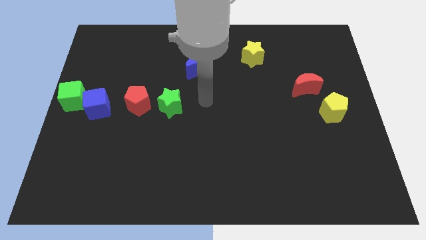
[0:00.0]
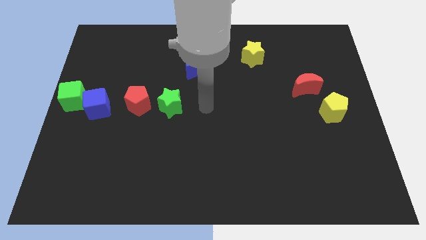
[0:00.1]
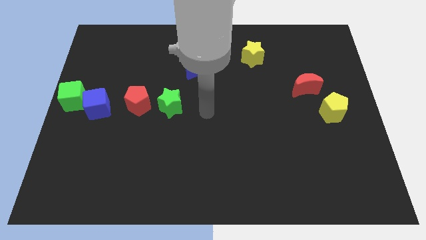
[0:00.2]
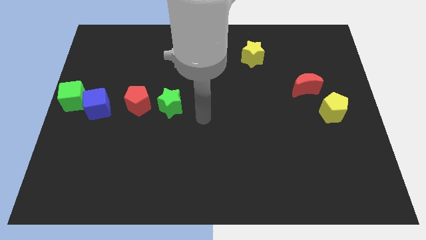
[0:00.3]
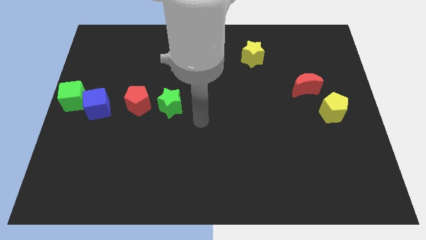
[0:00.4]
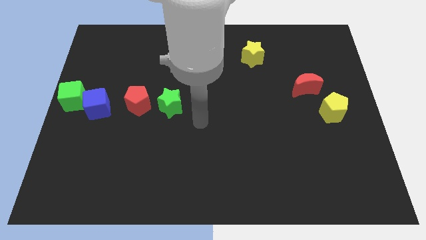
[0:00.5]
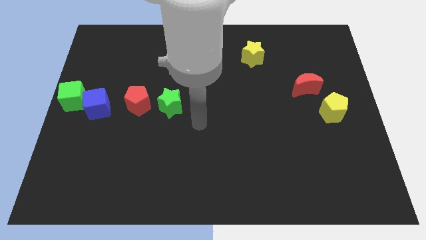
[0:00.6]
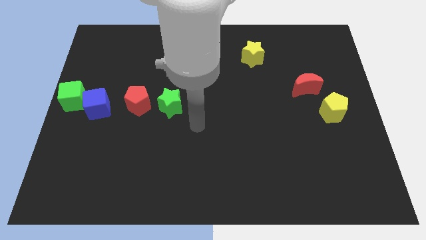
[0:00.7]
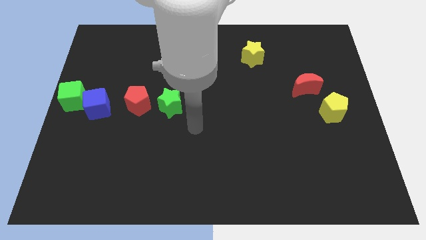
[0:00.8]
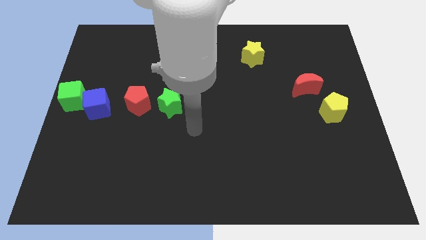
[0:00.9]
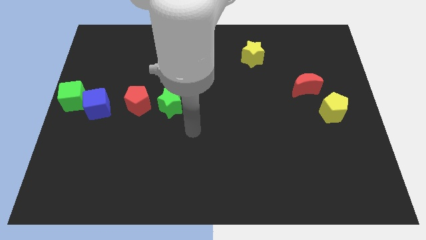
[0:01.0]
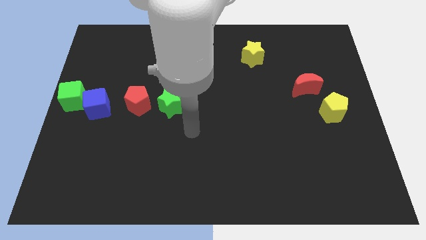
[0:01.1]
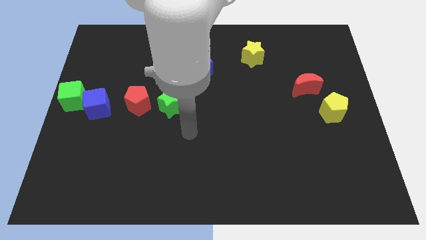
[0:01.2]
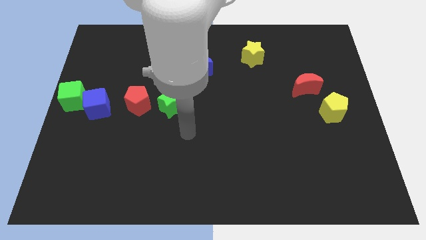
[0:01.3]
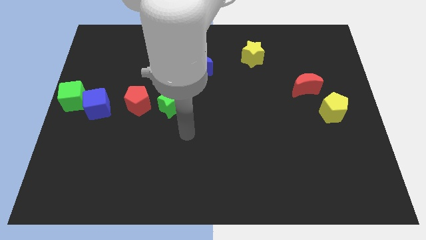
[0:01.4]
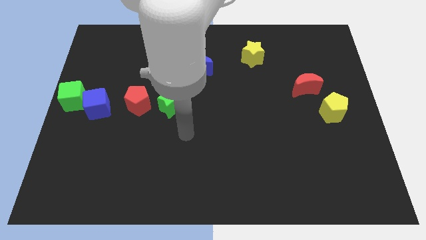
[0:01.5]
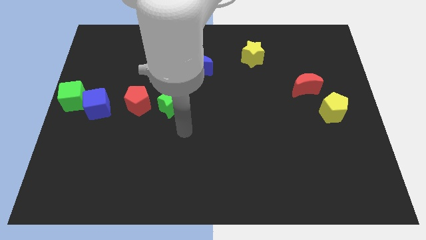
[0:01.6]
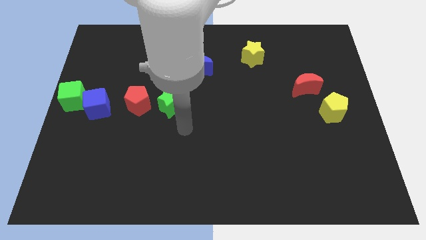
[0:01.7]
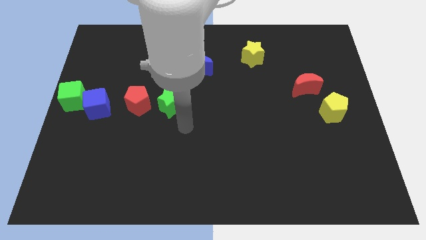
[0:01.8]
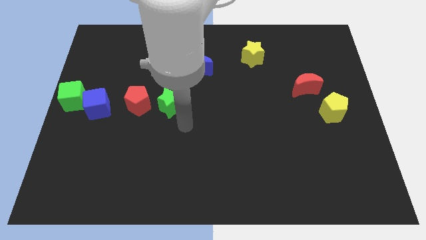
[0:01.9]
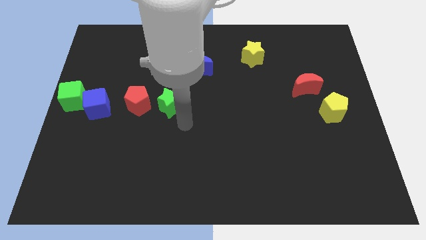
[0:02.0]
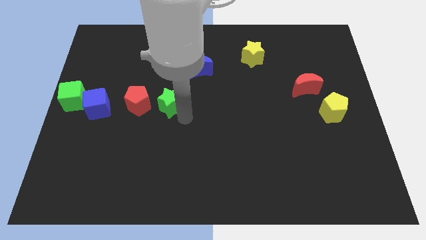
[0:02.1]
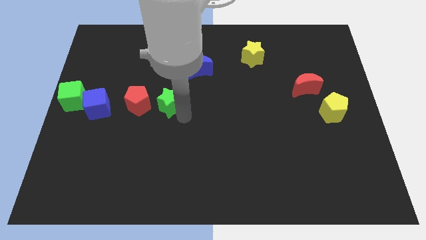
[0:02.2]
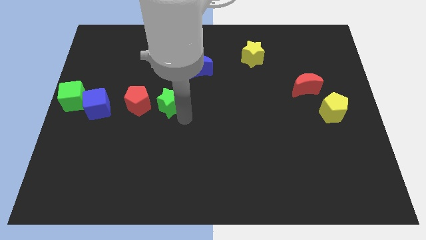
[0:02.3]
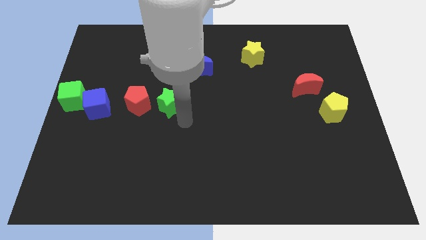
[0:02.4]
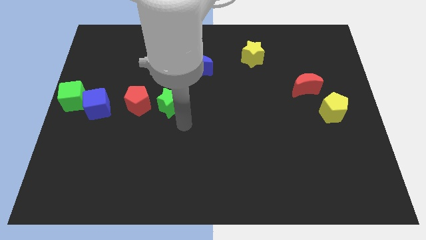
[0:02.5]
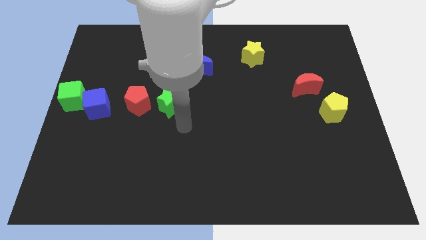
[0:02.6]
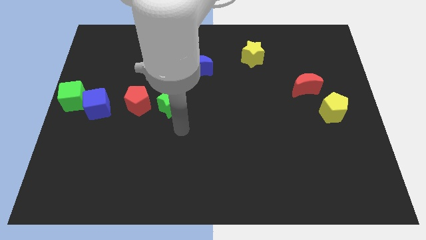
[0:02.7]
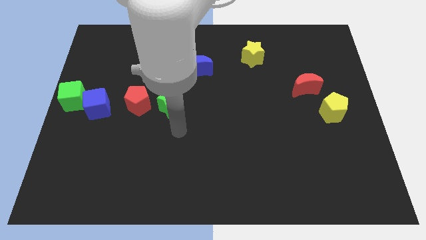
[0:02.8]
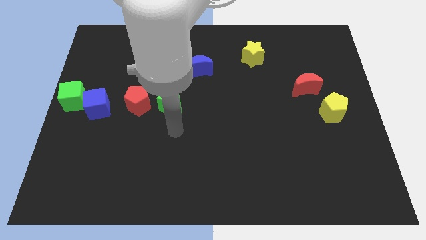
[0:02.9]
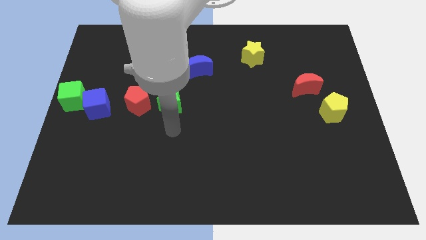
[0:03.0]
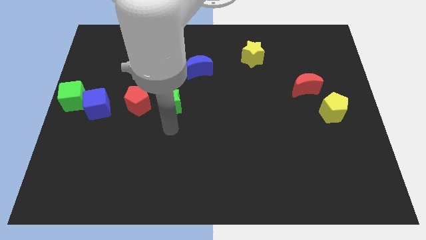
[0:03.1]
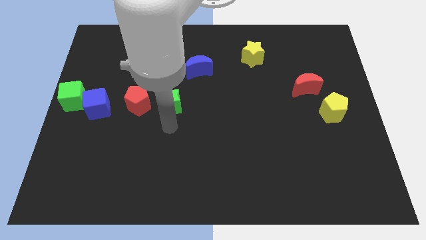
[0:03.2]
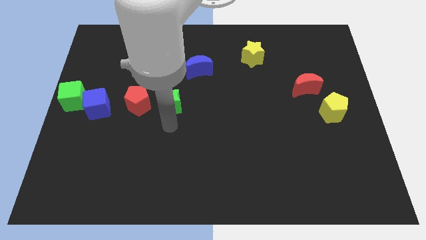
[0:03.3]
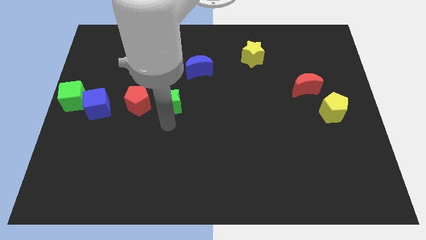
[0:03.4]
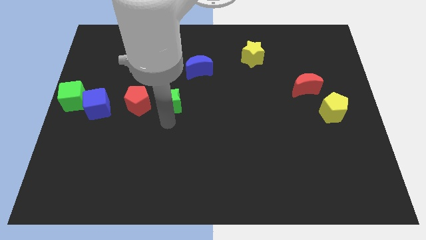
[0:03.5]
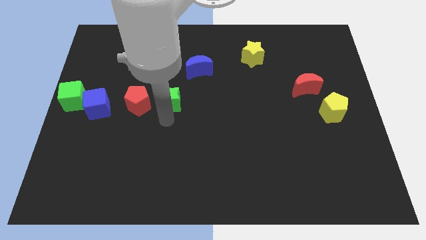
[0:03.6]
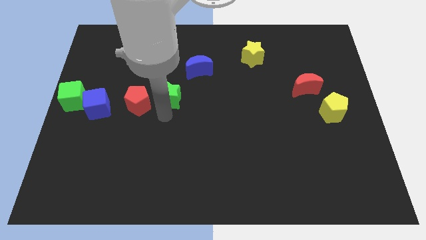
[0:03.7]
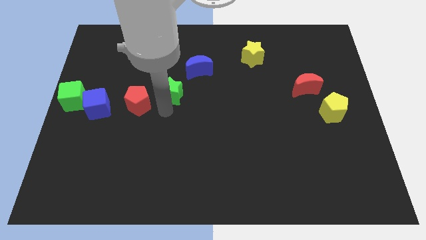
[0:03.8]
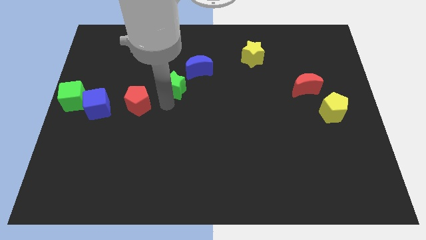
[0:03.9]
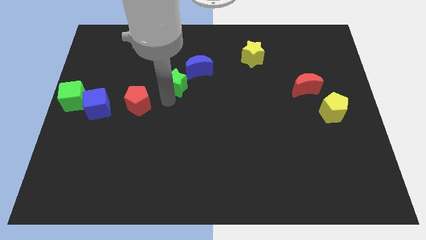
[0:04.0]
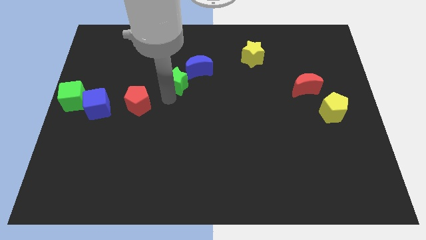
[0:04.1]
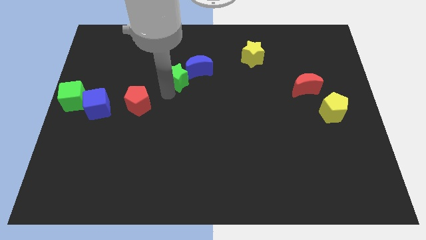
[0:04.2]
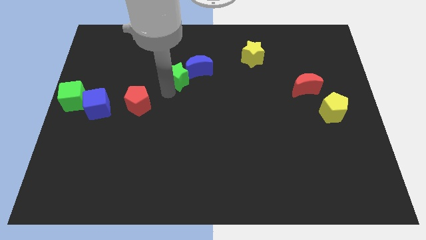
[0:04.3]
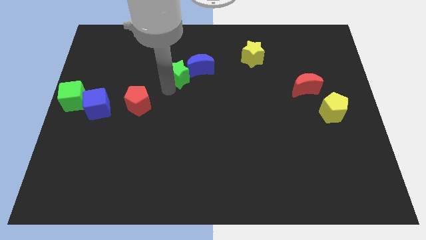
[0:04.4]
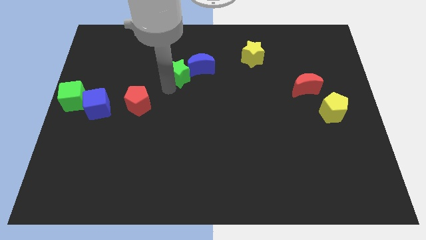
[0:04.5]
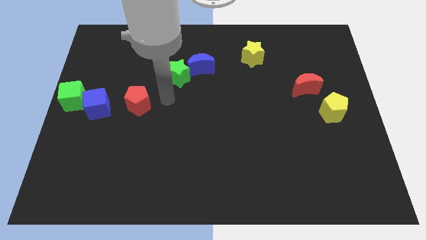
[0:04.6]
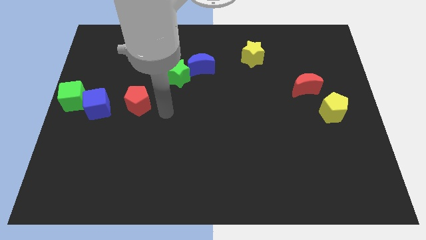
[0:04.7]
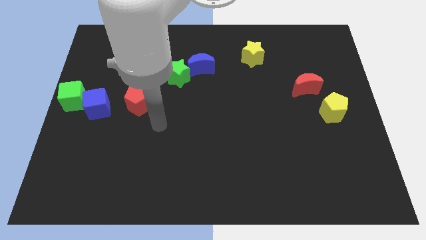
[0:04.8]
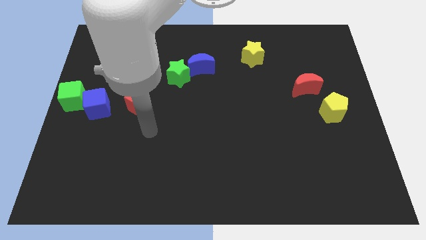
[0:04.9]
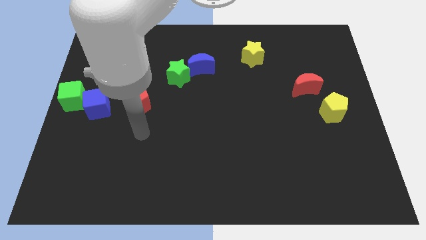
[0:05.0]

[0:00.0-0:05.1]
push the green star into the blue crescent

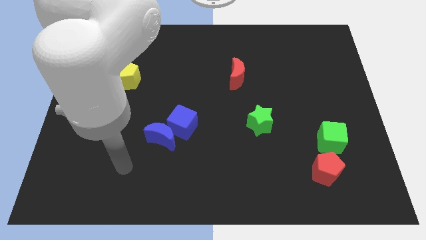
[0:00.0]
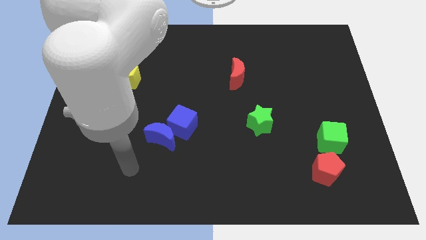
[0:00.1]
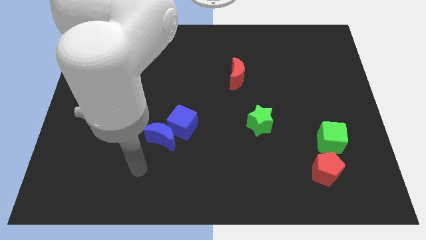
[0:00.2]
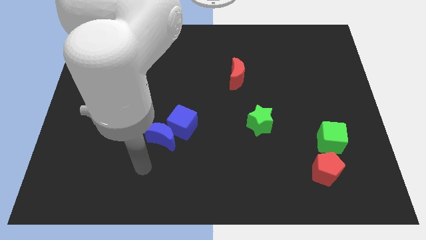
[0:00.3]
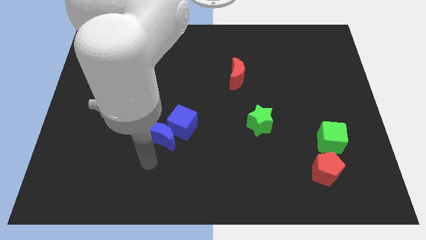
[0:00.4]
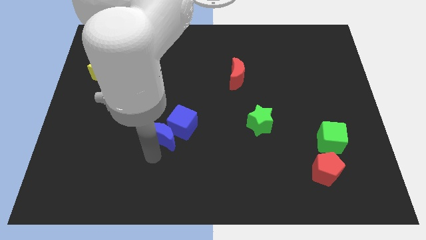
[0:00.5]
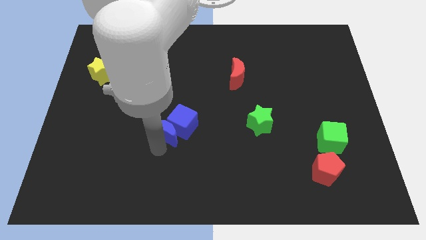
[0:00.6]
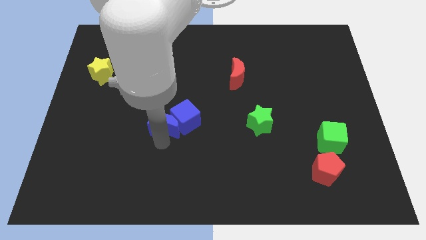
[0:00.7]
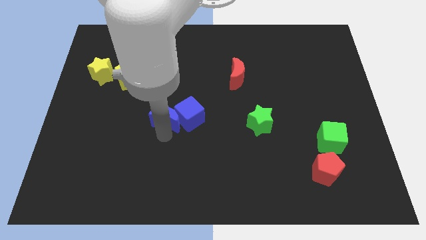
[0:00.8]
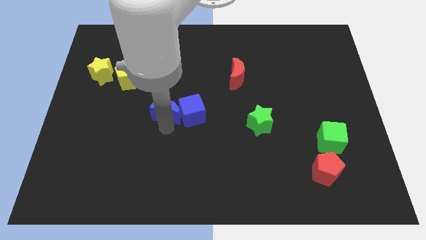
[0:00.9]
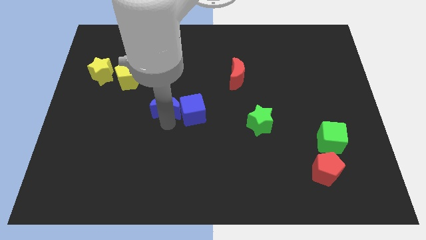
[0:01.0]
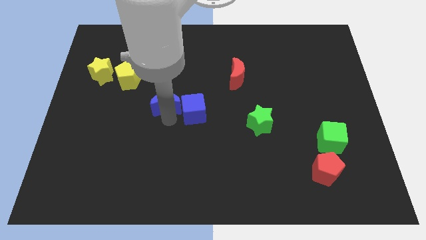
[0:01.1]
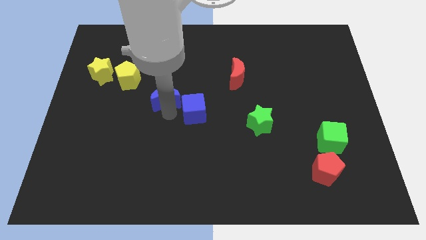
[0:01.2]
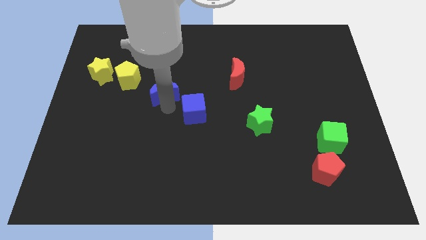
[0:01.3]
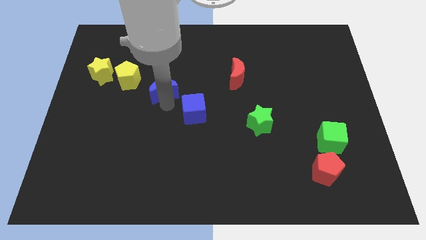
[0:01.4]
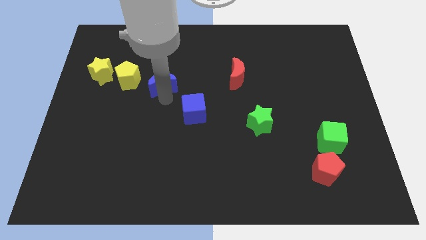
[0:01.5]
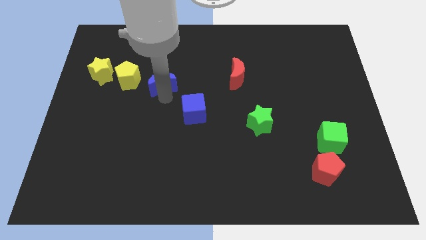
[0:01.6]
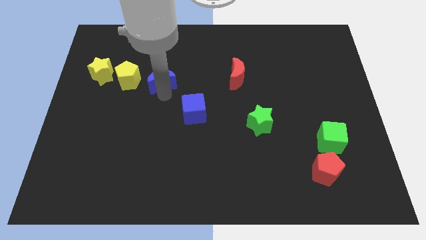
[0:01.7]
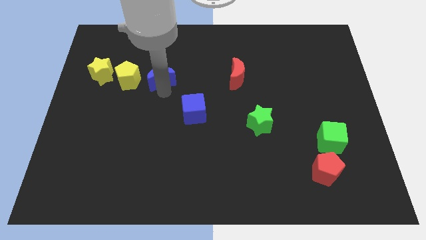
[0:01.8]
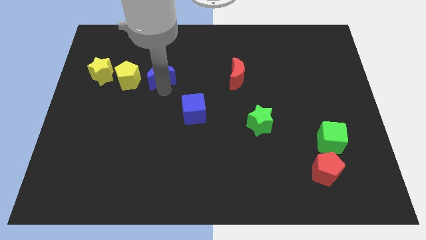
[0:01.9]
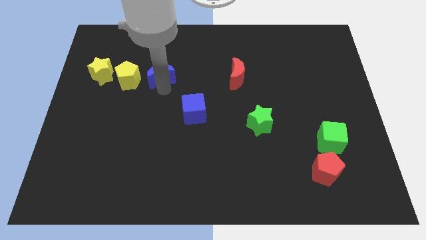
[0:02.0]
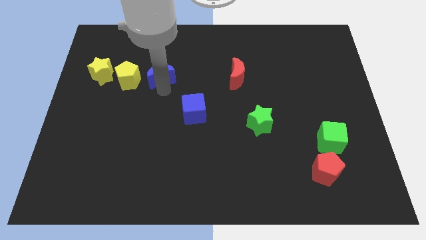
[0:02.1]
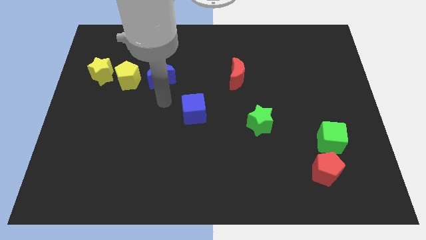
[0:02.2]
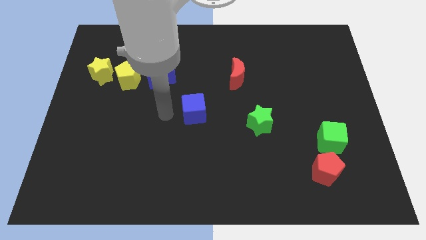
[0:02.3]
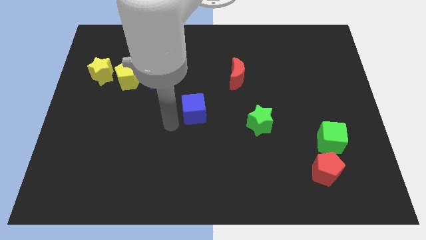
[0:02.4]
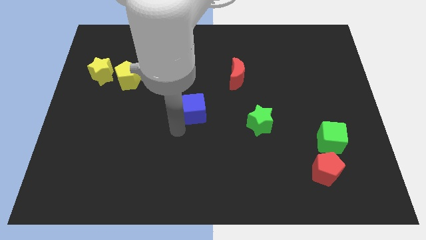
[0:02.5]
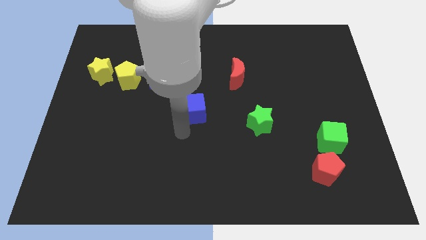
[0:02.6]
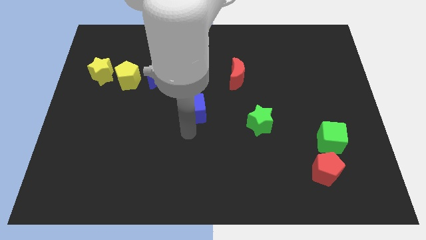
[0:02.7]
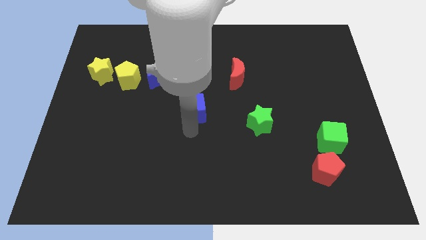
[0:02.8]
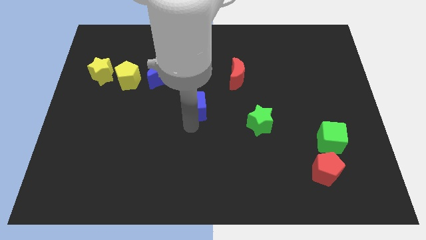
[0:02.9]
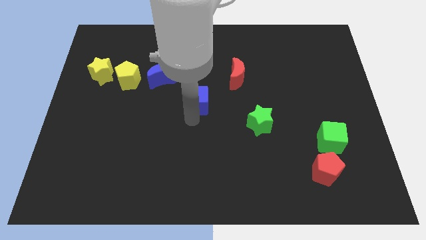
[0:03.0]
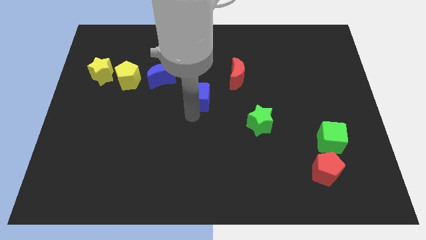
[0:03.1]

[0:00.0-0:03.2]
push blue cube slightly towards upwards

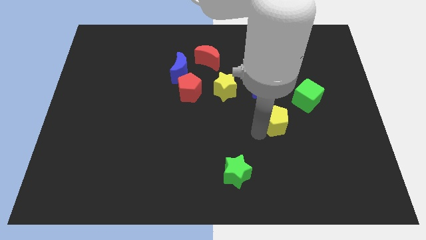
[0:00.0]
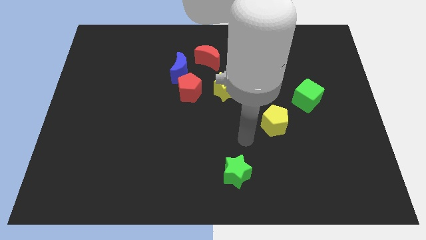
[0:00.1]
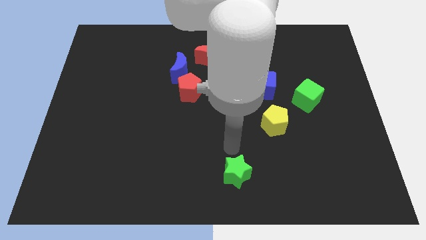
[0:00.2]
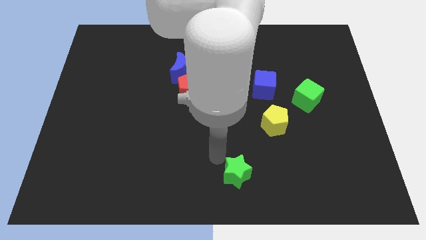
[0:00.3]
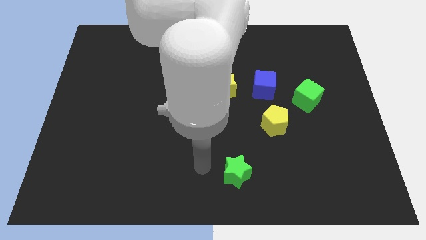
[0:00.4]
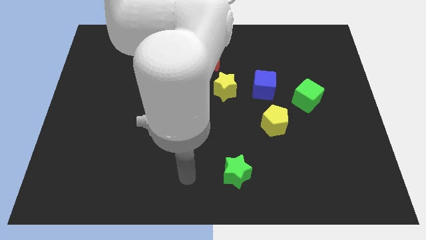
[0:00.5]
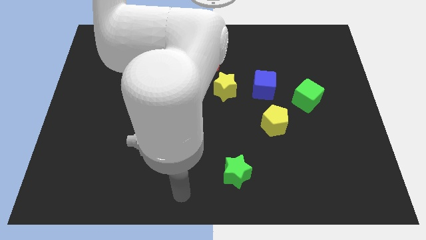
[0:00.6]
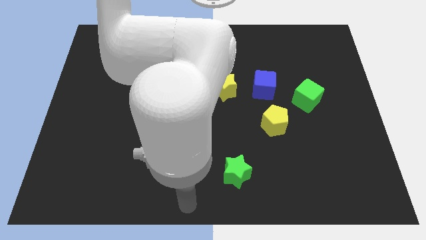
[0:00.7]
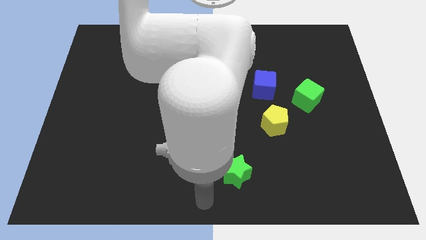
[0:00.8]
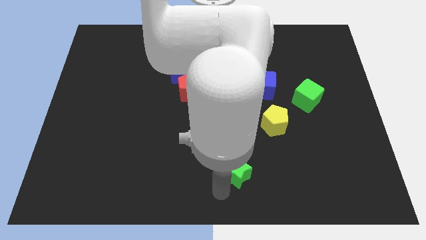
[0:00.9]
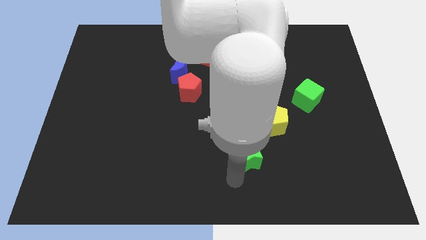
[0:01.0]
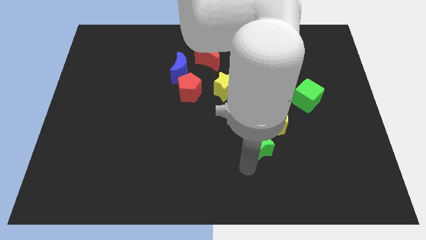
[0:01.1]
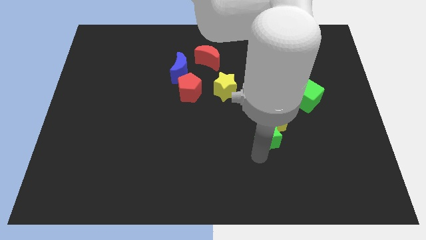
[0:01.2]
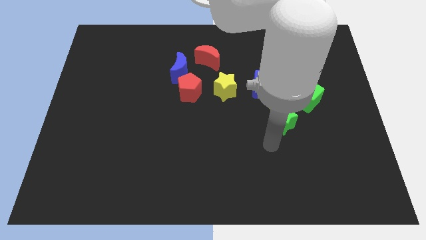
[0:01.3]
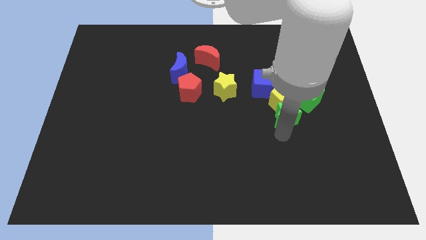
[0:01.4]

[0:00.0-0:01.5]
push the green star into the yellow pentagon
